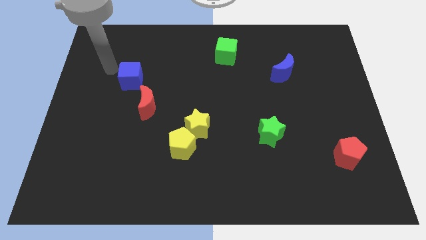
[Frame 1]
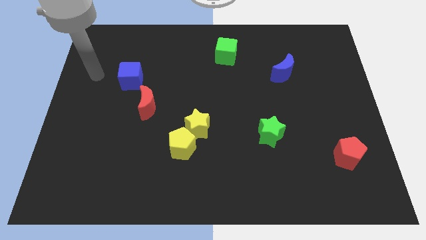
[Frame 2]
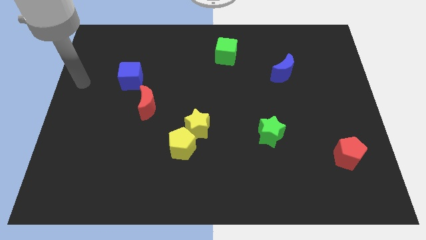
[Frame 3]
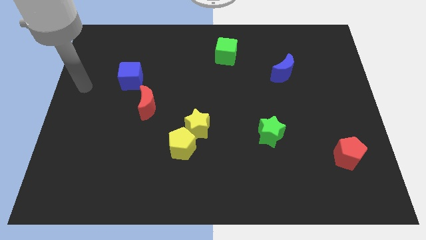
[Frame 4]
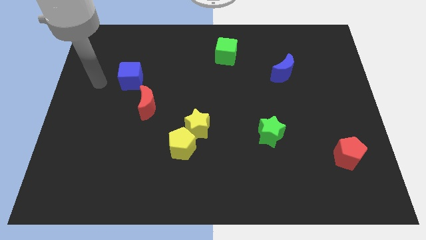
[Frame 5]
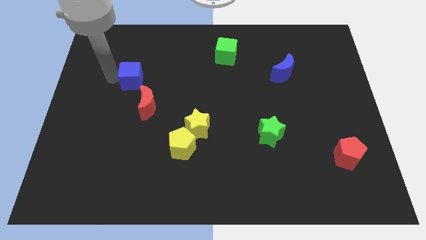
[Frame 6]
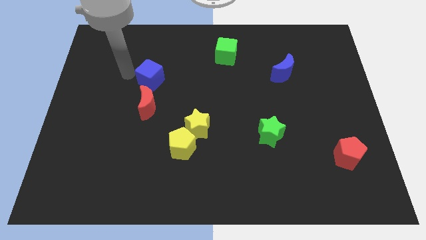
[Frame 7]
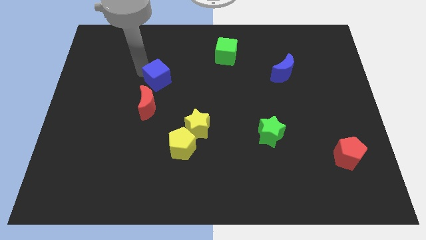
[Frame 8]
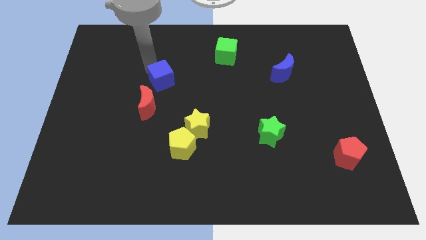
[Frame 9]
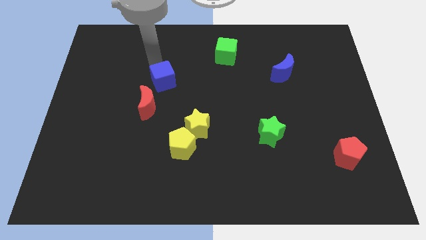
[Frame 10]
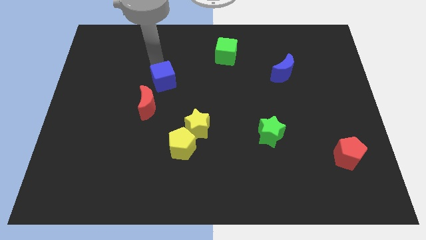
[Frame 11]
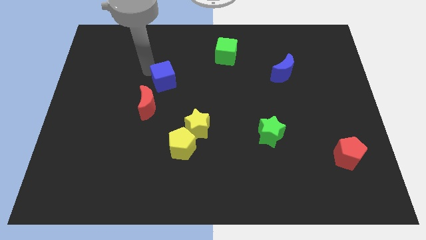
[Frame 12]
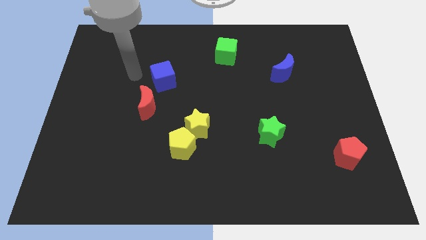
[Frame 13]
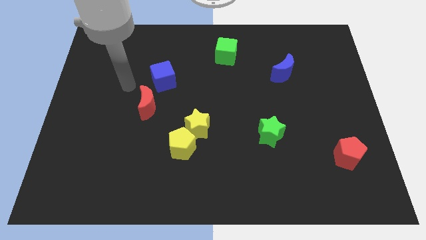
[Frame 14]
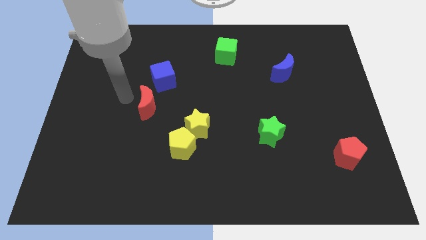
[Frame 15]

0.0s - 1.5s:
push the blue cube diagonal to the red crecent

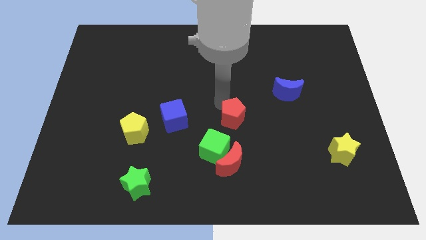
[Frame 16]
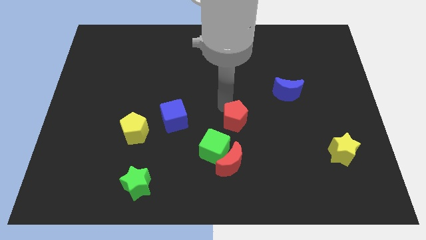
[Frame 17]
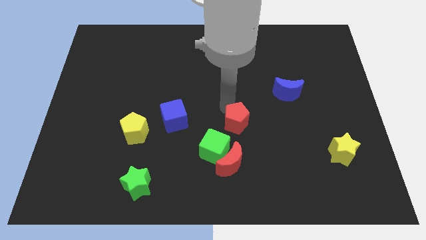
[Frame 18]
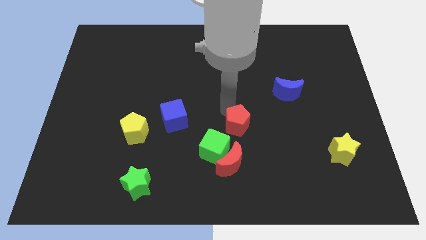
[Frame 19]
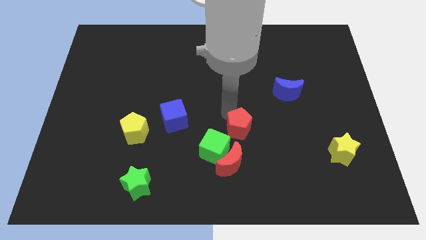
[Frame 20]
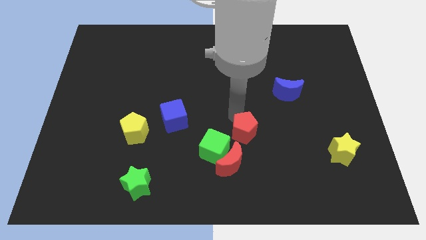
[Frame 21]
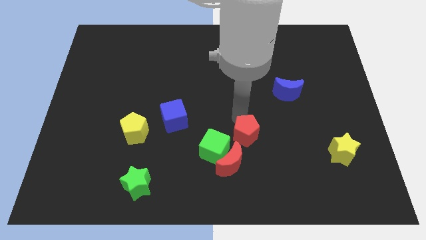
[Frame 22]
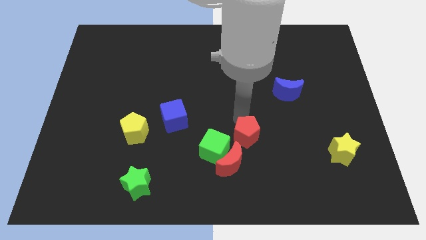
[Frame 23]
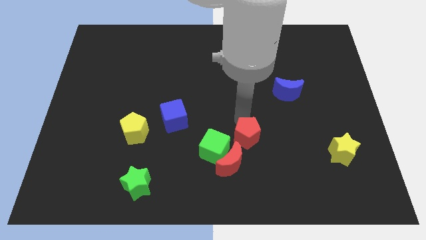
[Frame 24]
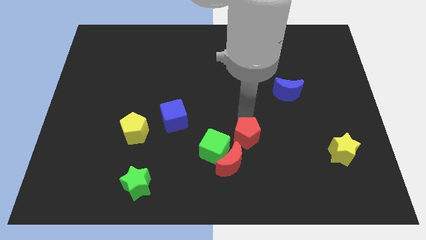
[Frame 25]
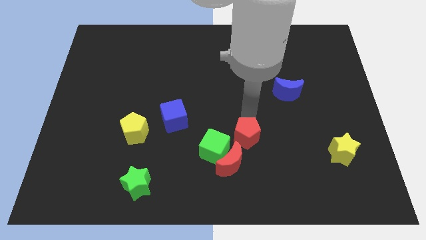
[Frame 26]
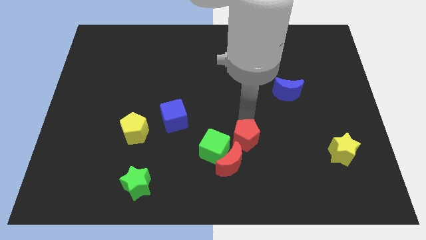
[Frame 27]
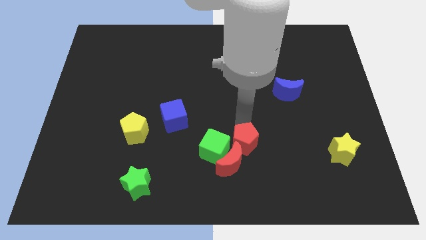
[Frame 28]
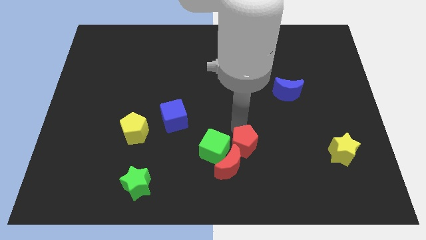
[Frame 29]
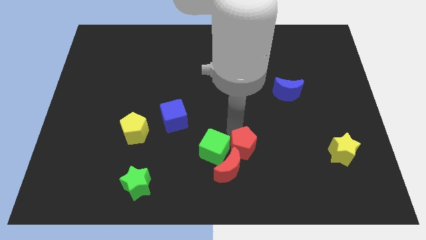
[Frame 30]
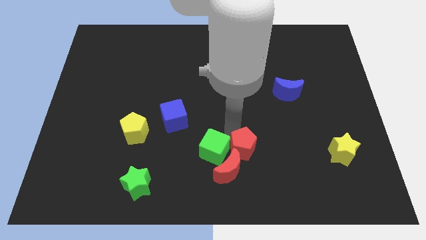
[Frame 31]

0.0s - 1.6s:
move the red pentagon to the right of the green cube

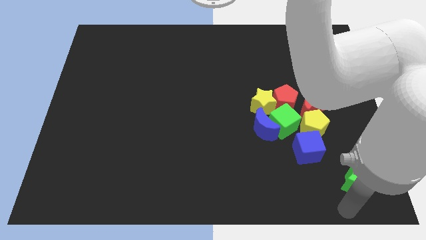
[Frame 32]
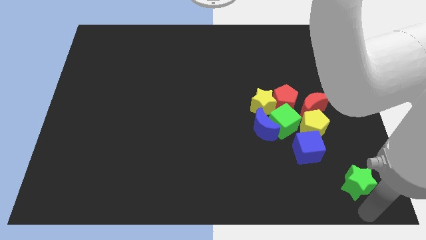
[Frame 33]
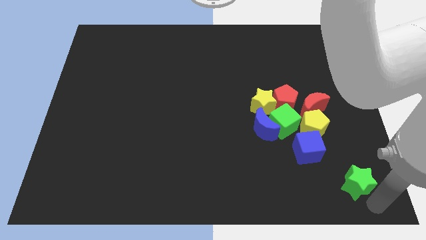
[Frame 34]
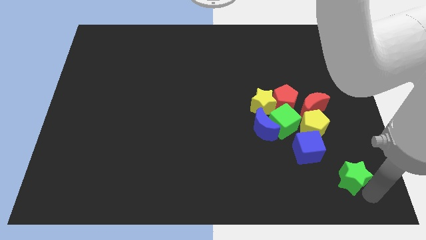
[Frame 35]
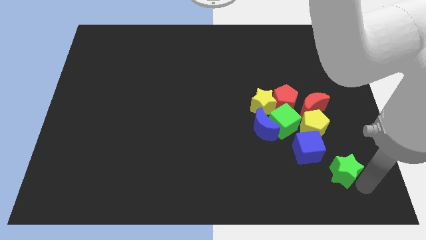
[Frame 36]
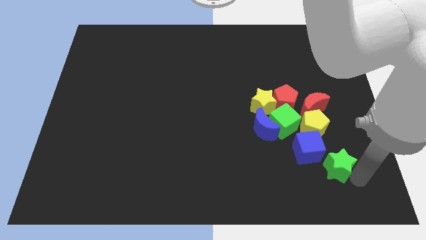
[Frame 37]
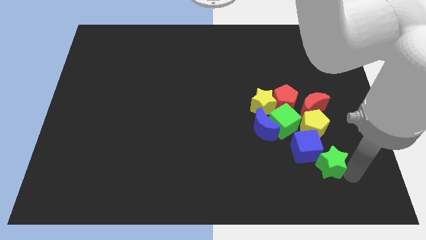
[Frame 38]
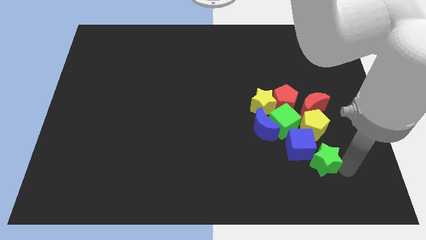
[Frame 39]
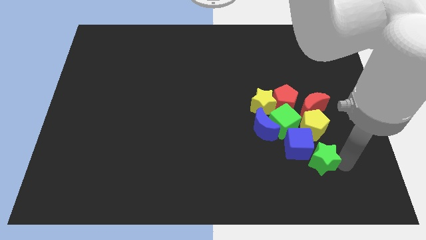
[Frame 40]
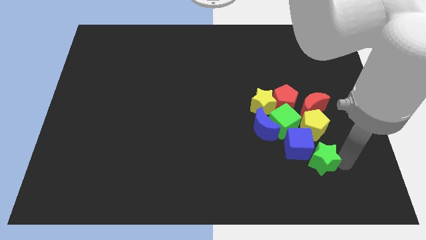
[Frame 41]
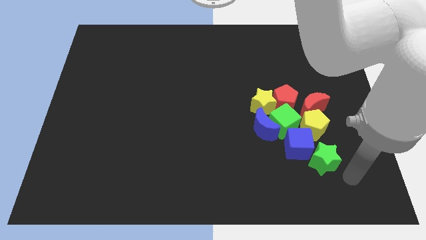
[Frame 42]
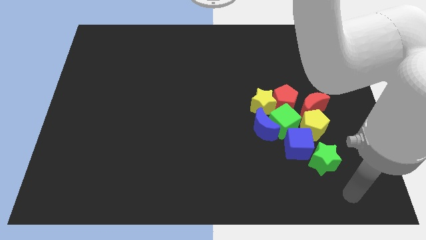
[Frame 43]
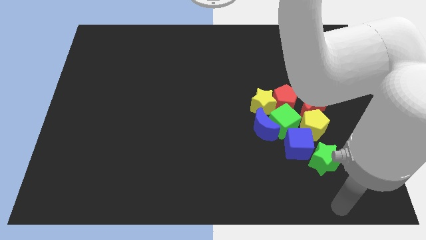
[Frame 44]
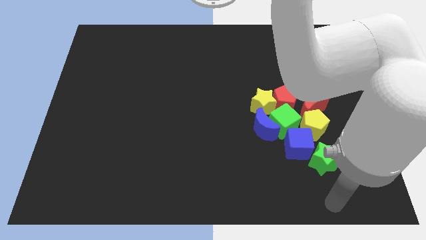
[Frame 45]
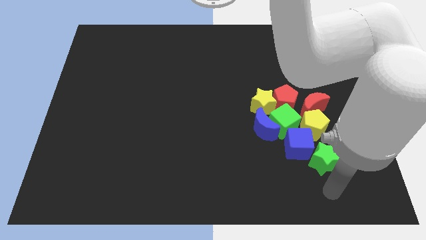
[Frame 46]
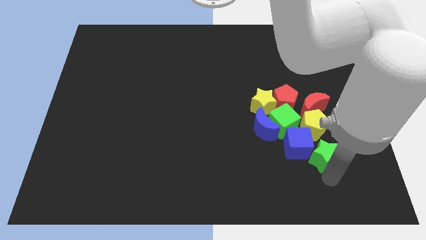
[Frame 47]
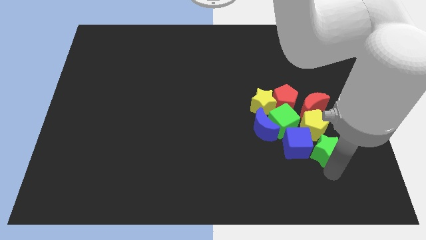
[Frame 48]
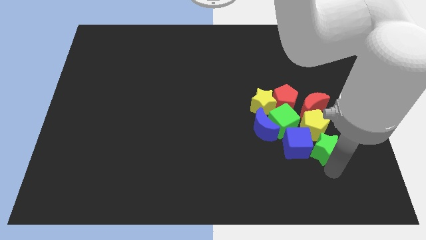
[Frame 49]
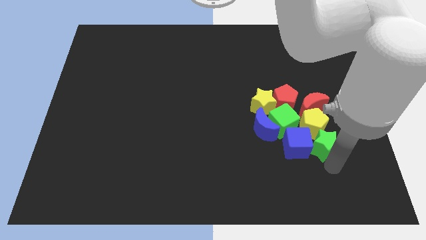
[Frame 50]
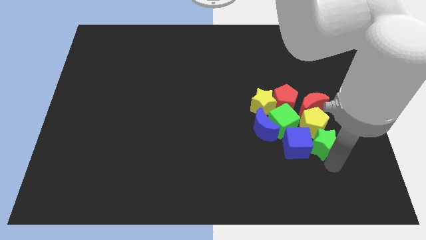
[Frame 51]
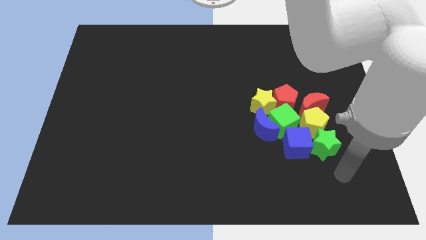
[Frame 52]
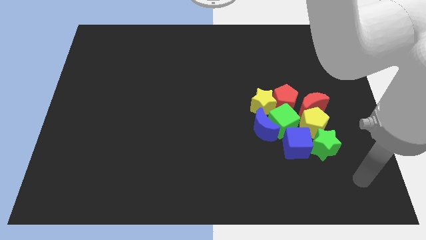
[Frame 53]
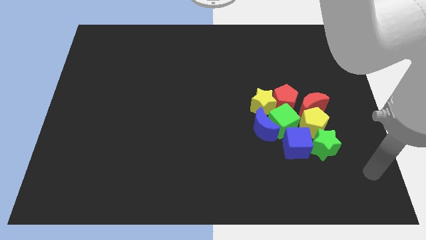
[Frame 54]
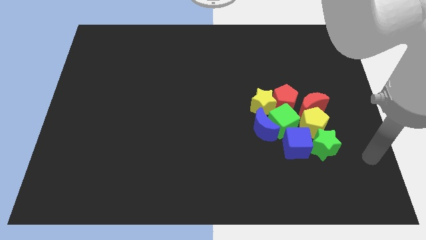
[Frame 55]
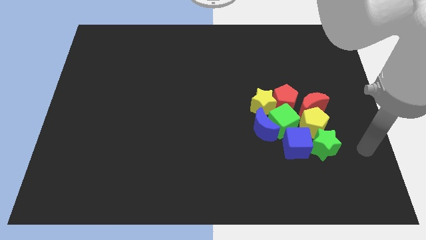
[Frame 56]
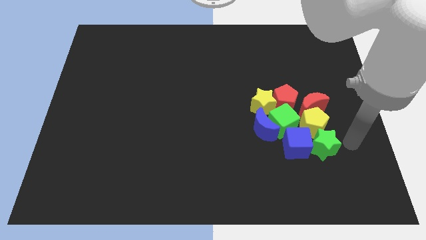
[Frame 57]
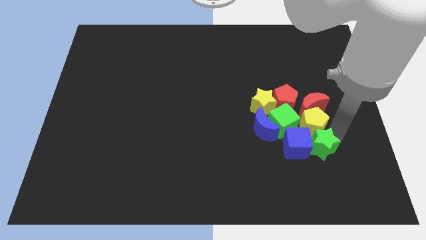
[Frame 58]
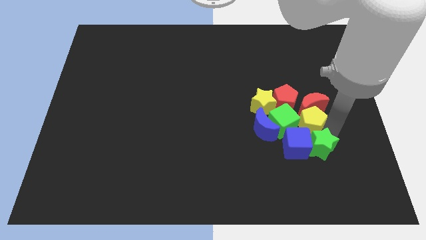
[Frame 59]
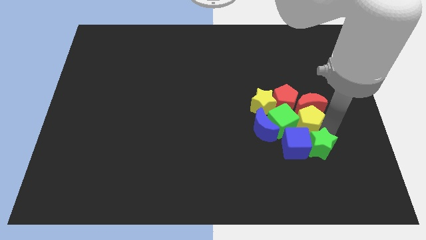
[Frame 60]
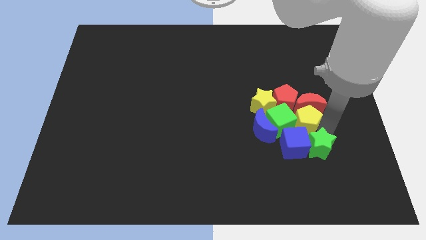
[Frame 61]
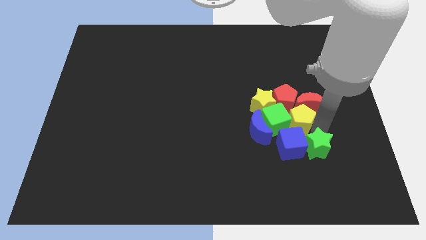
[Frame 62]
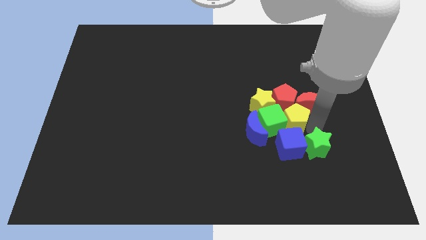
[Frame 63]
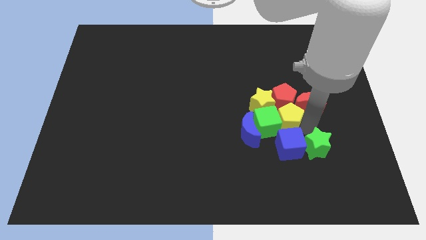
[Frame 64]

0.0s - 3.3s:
push the green star to the right of blue cube

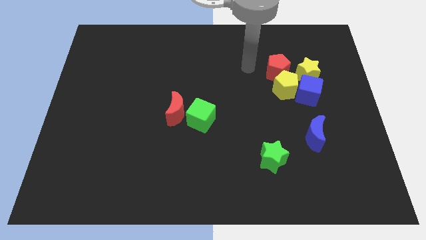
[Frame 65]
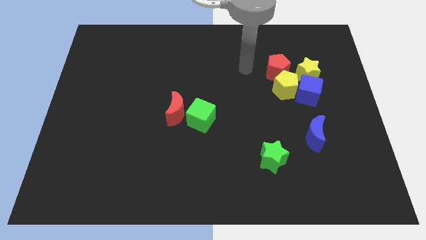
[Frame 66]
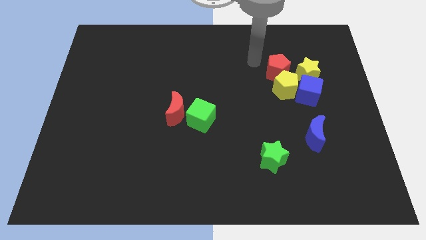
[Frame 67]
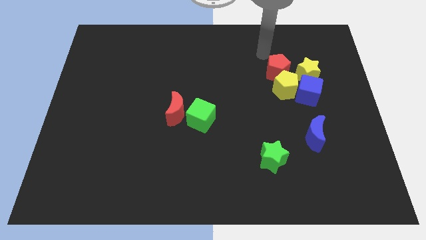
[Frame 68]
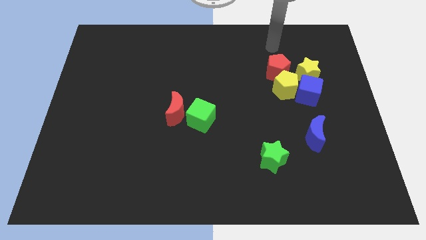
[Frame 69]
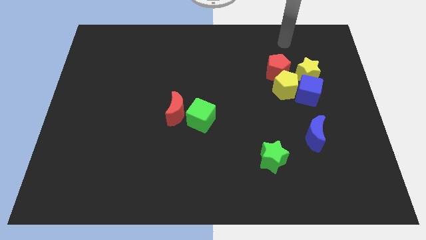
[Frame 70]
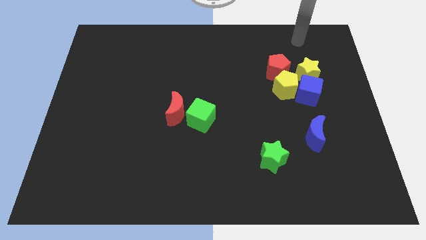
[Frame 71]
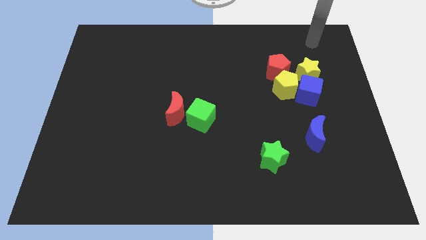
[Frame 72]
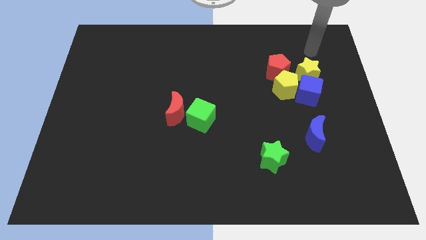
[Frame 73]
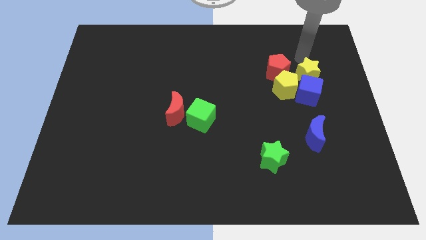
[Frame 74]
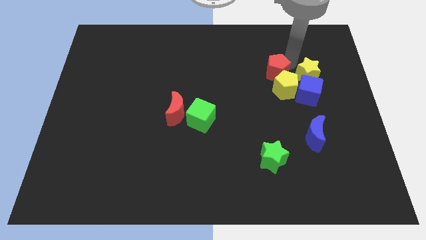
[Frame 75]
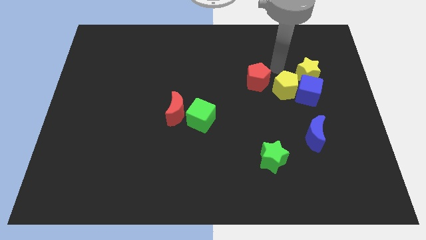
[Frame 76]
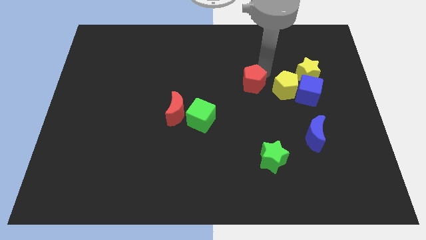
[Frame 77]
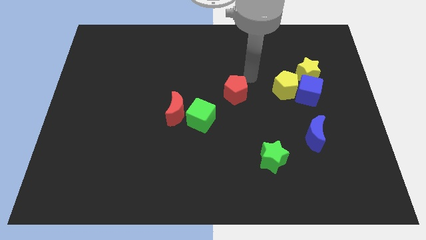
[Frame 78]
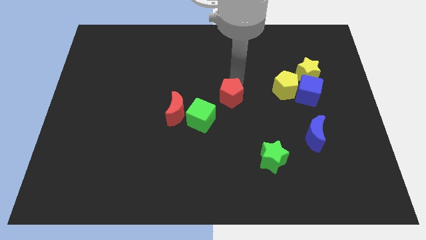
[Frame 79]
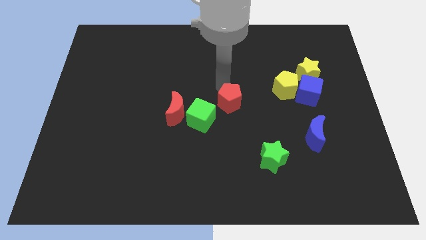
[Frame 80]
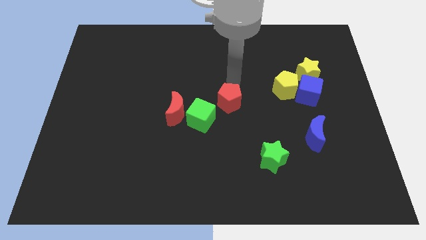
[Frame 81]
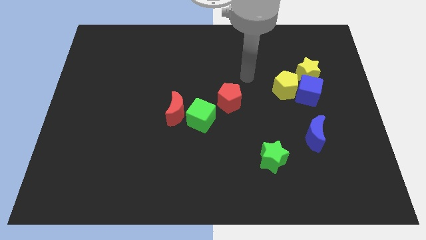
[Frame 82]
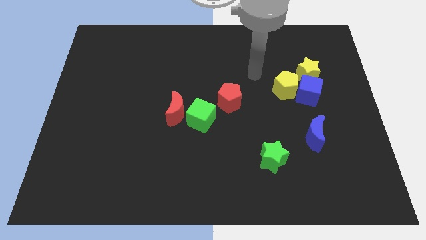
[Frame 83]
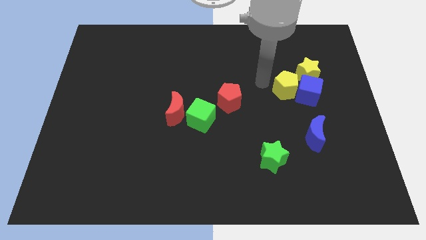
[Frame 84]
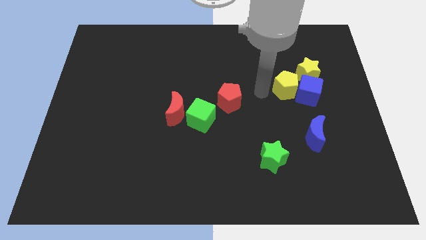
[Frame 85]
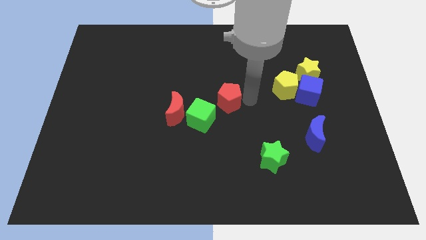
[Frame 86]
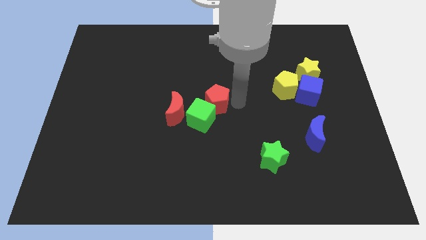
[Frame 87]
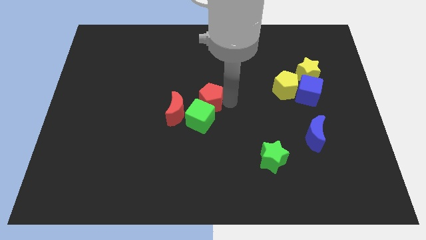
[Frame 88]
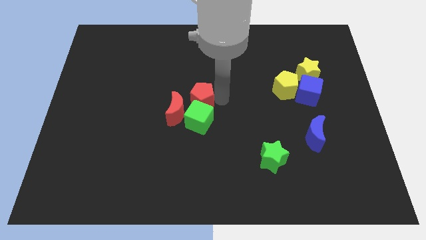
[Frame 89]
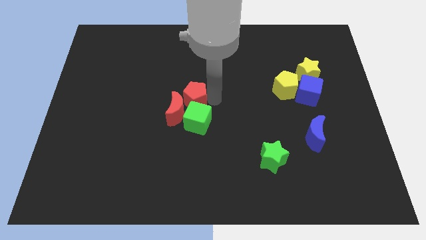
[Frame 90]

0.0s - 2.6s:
slide the red pentagon to the top of the green cube
